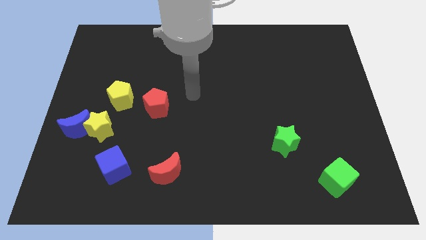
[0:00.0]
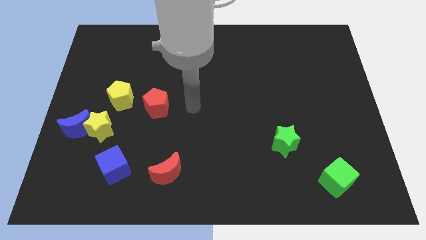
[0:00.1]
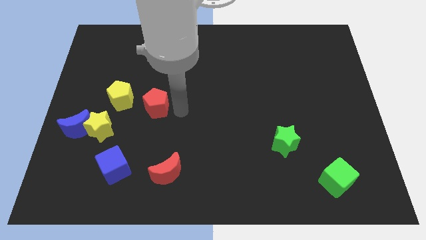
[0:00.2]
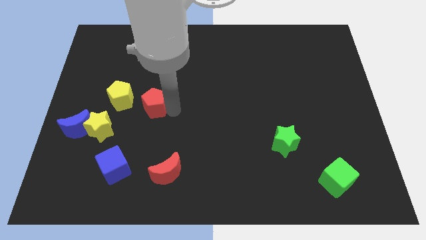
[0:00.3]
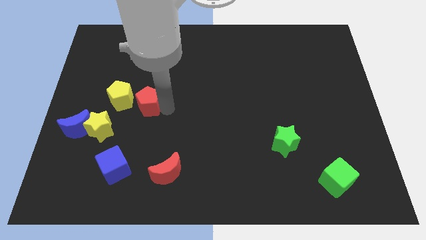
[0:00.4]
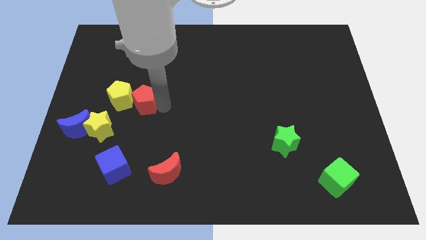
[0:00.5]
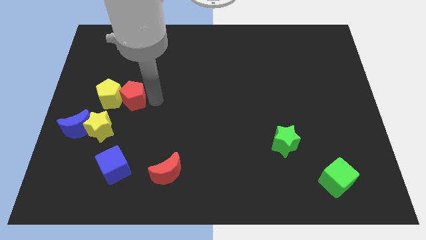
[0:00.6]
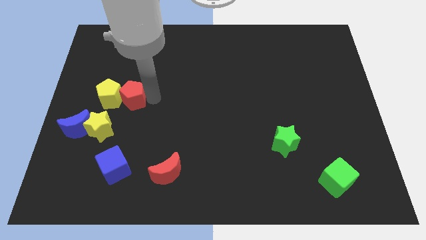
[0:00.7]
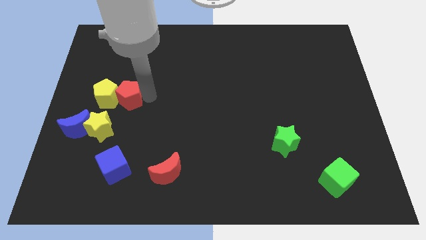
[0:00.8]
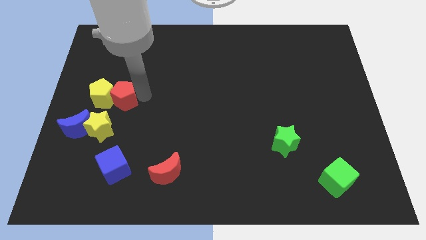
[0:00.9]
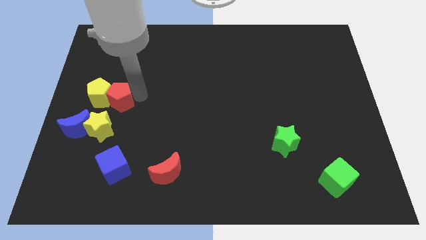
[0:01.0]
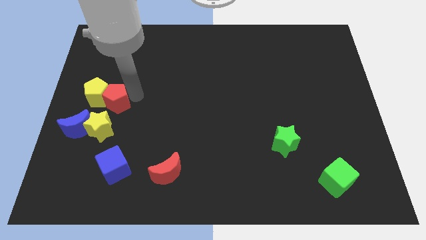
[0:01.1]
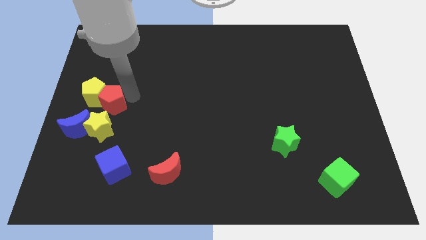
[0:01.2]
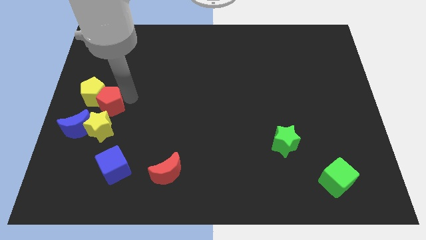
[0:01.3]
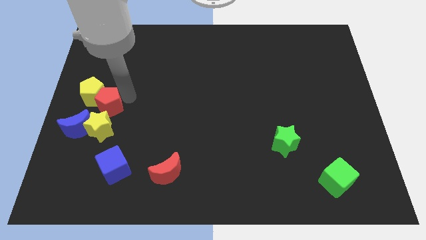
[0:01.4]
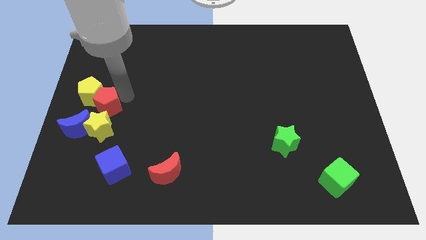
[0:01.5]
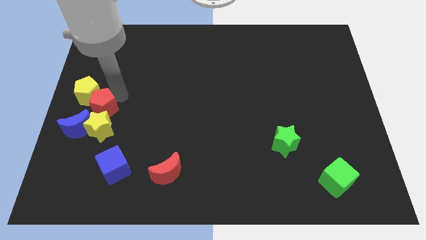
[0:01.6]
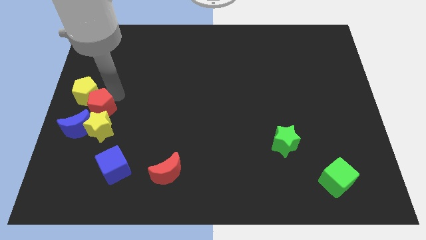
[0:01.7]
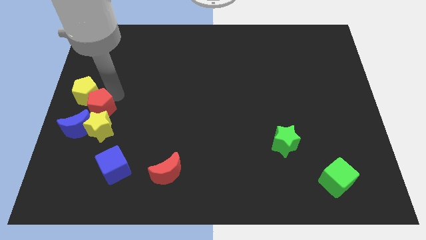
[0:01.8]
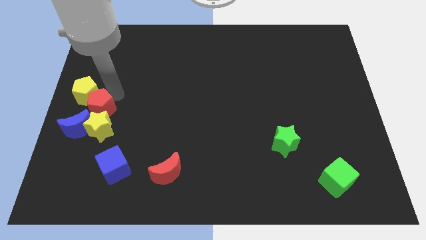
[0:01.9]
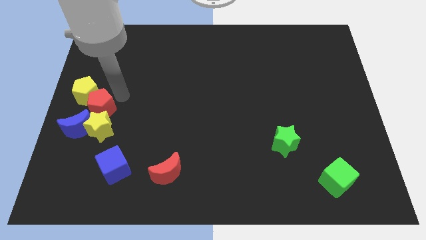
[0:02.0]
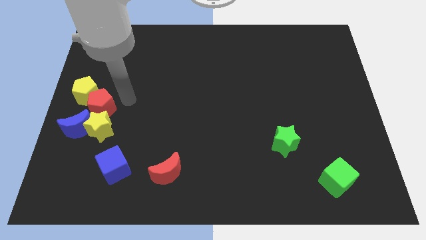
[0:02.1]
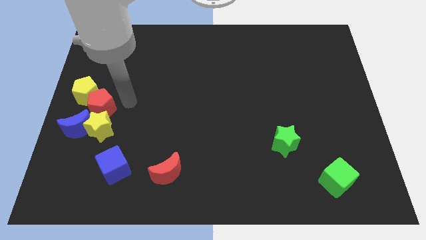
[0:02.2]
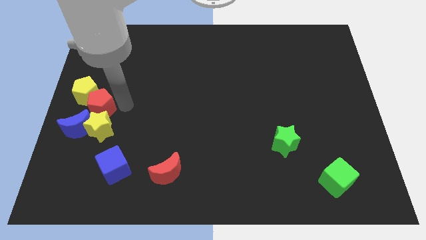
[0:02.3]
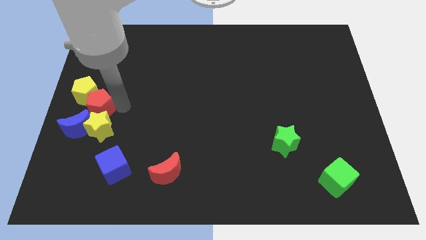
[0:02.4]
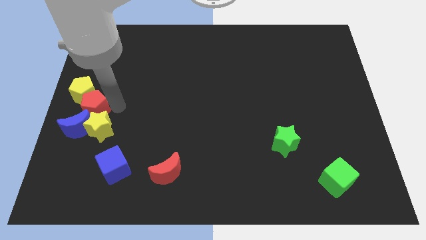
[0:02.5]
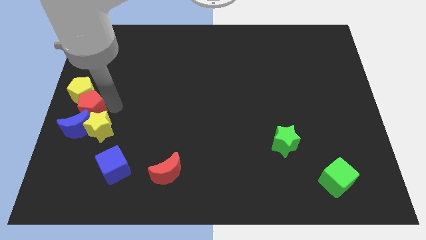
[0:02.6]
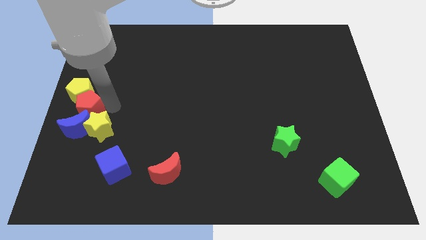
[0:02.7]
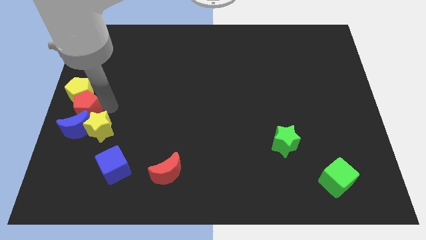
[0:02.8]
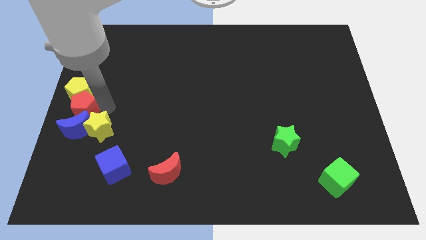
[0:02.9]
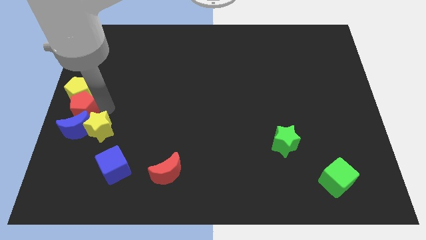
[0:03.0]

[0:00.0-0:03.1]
push the red pentagon into the yellow pentagon

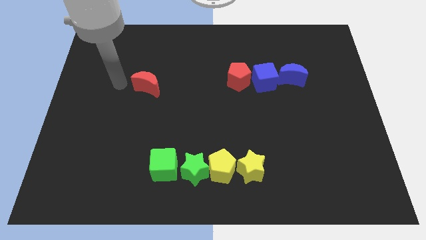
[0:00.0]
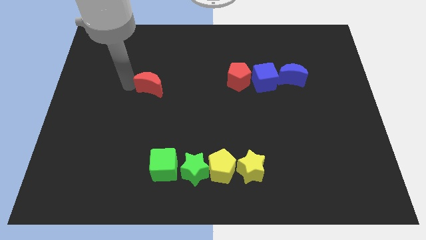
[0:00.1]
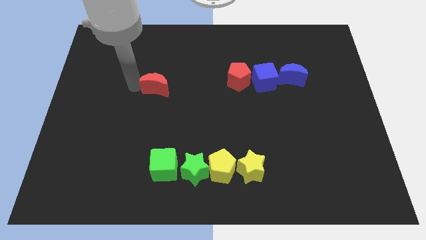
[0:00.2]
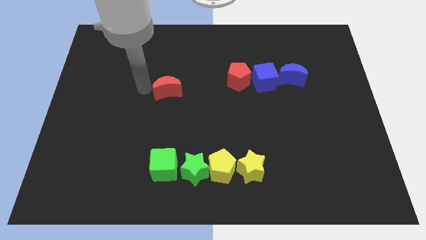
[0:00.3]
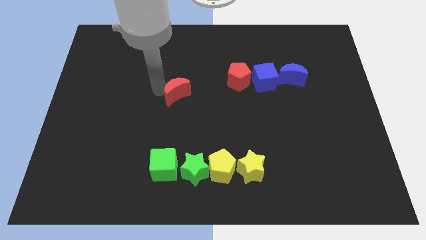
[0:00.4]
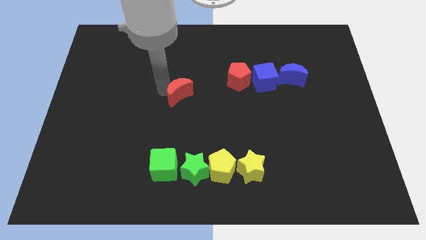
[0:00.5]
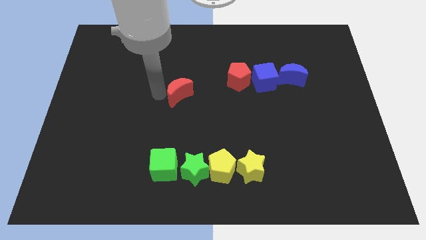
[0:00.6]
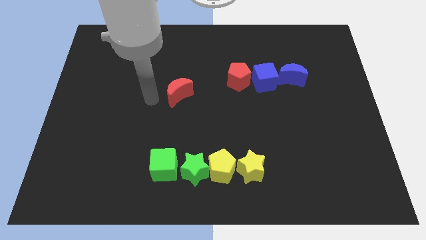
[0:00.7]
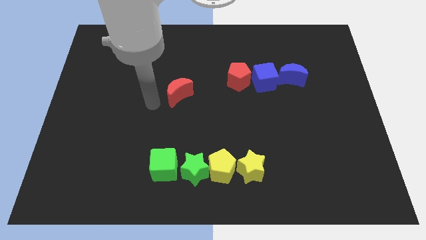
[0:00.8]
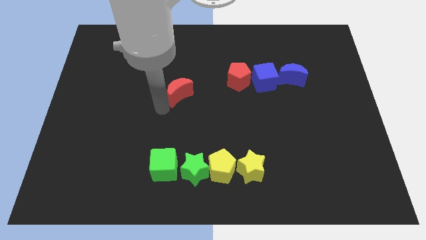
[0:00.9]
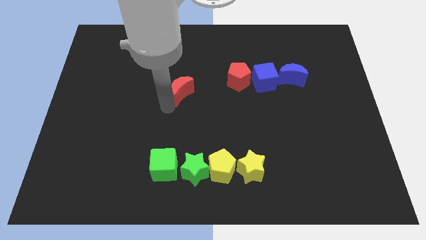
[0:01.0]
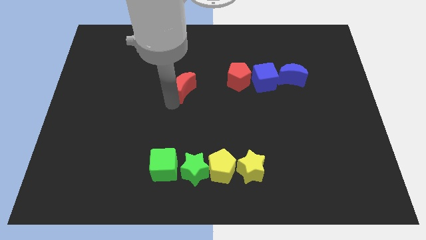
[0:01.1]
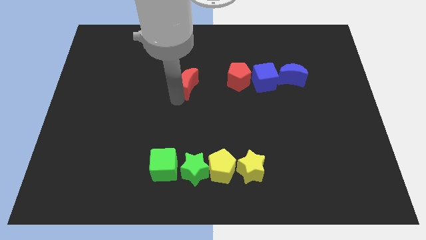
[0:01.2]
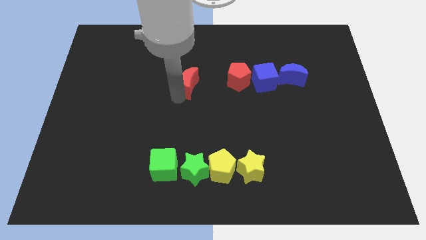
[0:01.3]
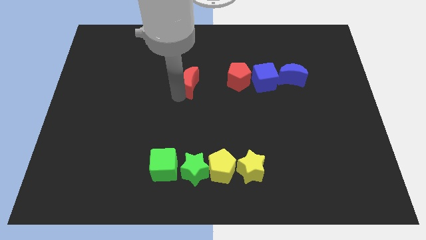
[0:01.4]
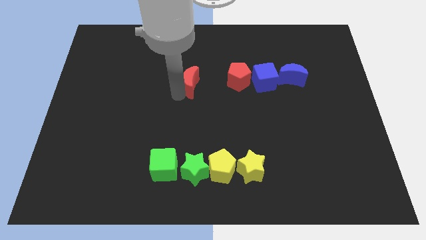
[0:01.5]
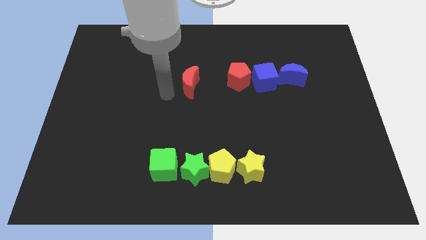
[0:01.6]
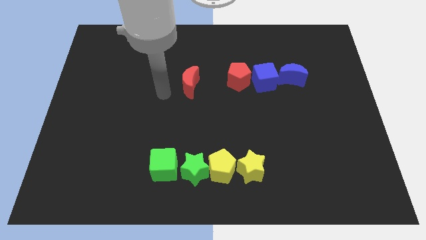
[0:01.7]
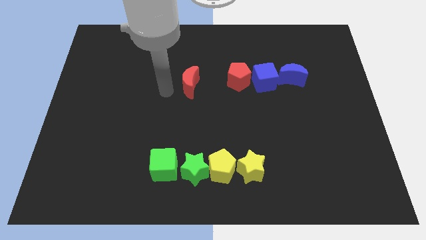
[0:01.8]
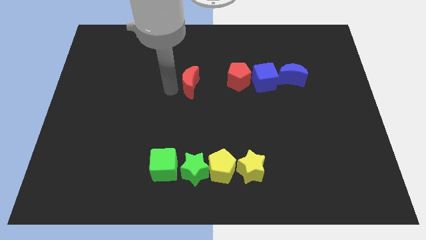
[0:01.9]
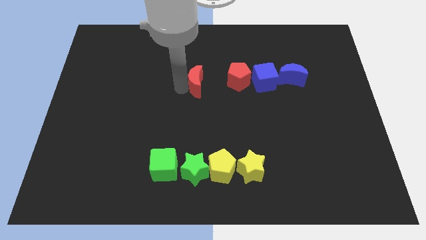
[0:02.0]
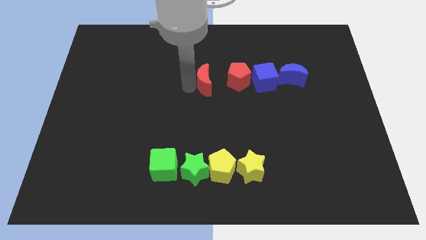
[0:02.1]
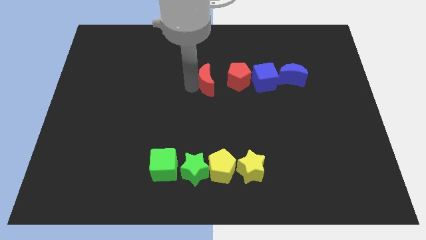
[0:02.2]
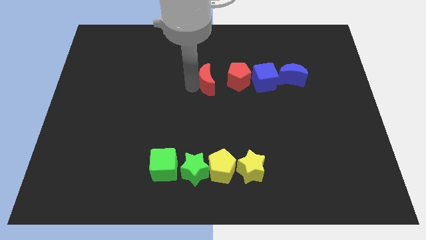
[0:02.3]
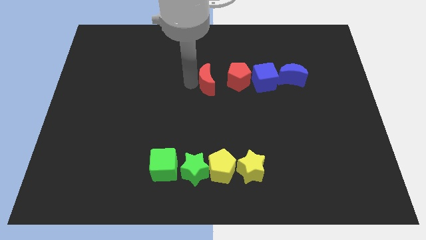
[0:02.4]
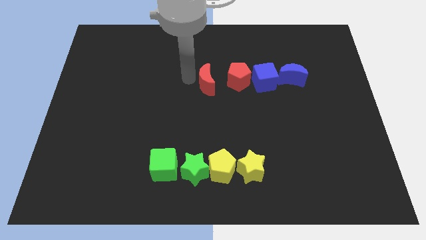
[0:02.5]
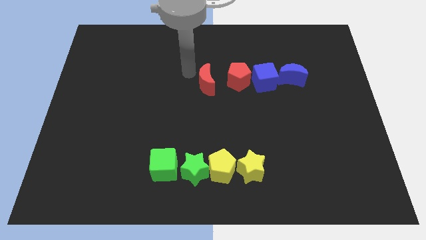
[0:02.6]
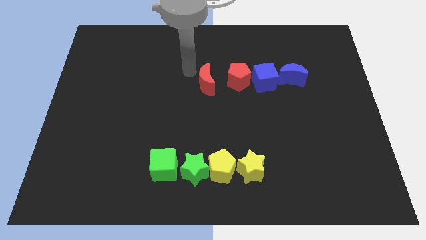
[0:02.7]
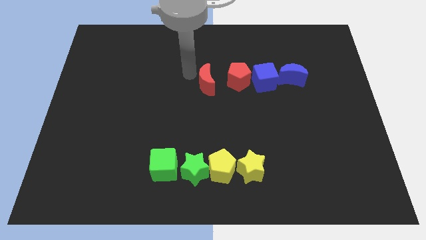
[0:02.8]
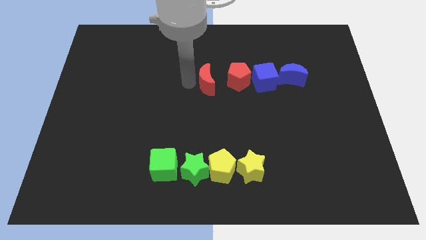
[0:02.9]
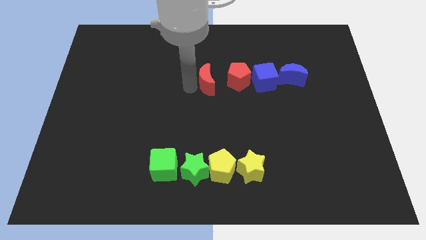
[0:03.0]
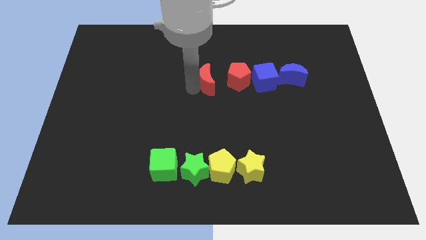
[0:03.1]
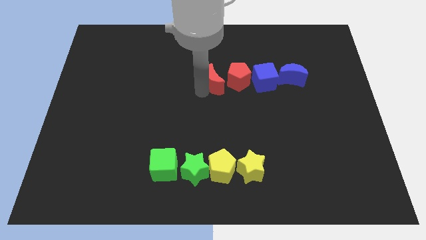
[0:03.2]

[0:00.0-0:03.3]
place the red moon parallel left to the red pentagon

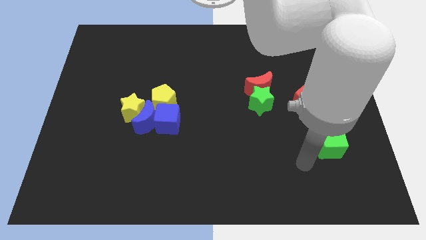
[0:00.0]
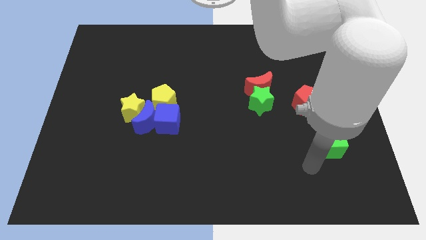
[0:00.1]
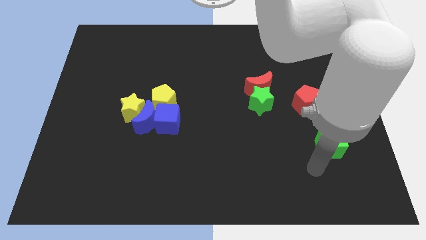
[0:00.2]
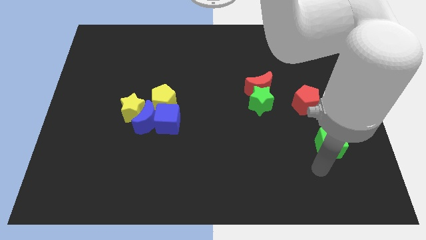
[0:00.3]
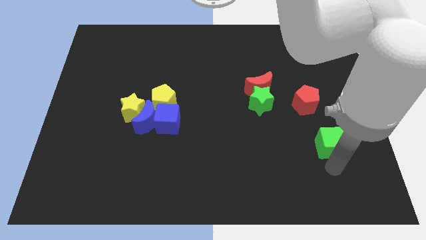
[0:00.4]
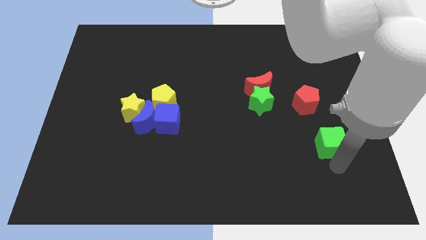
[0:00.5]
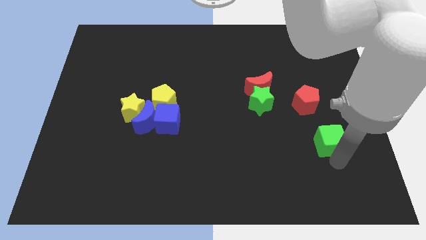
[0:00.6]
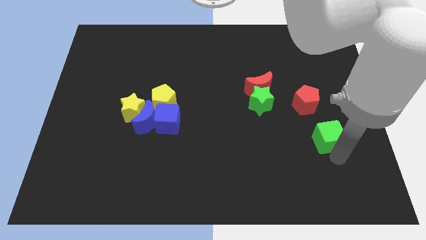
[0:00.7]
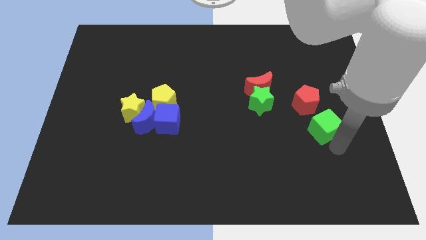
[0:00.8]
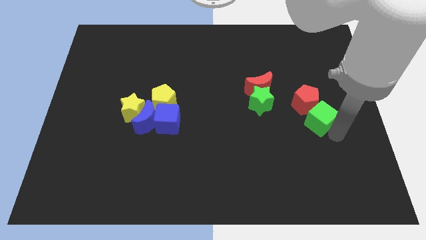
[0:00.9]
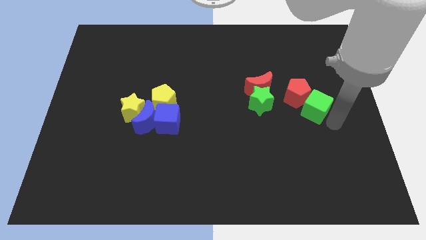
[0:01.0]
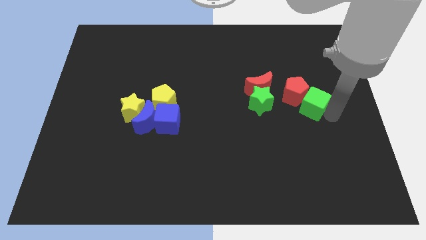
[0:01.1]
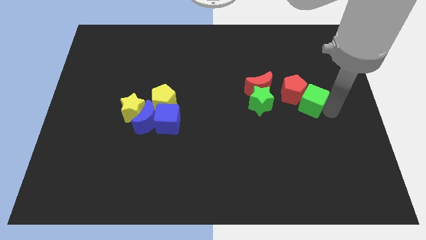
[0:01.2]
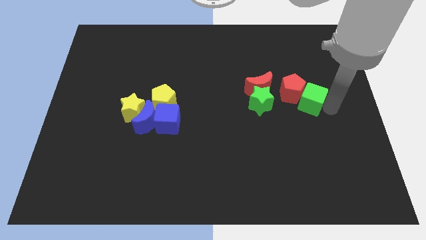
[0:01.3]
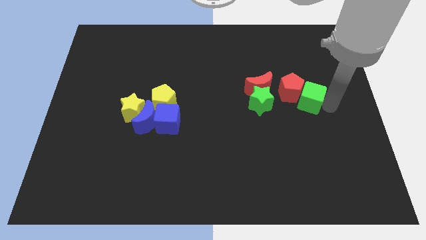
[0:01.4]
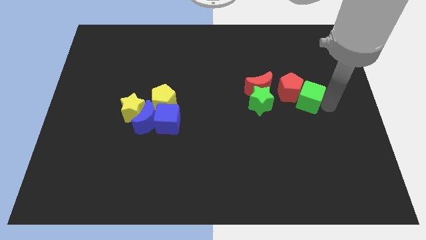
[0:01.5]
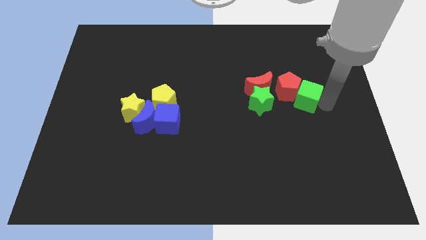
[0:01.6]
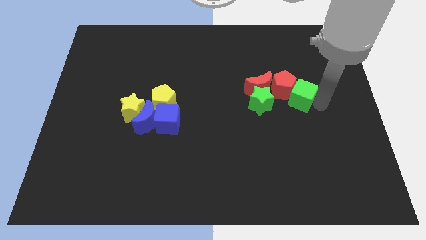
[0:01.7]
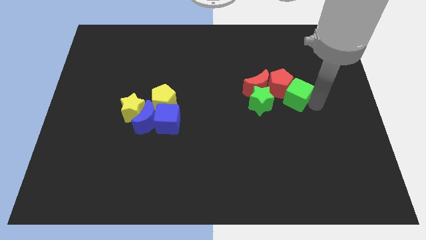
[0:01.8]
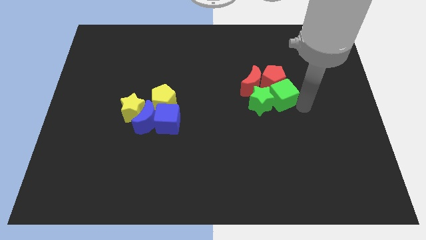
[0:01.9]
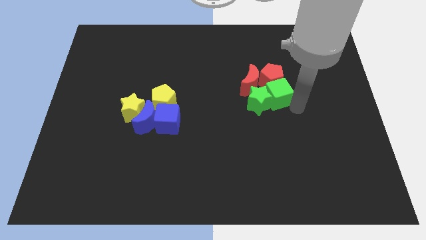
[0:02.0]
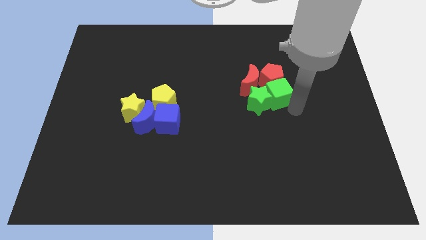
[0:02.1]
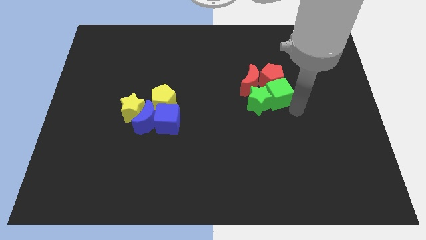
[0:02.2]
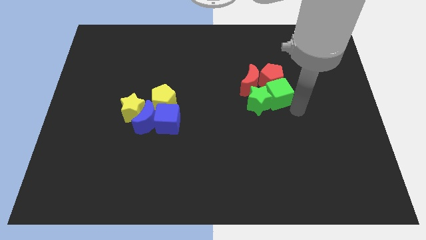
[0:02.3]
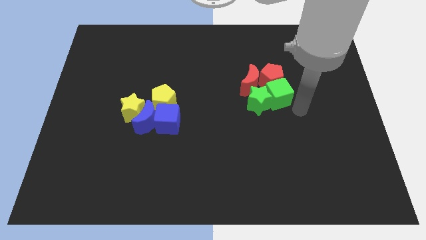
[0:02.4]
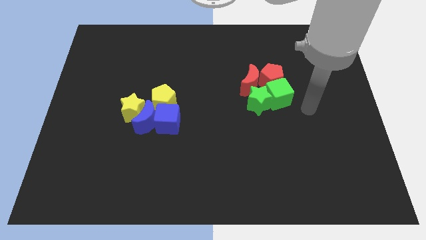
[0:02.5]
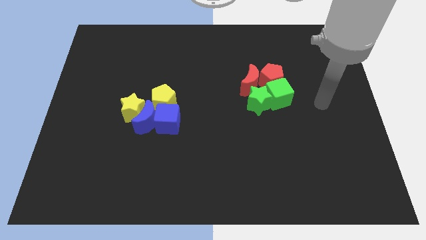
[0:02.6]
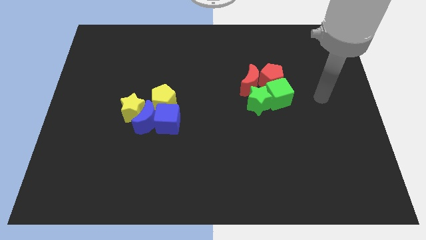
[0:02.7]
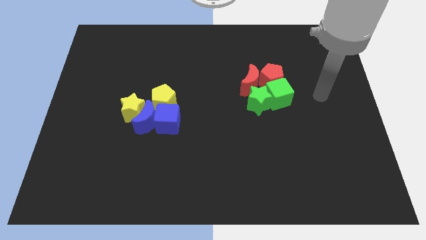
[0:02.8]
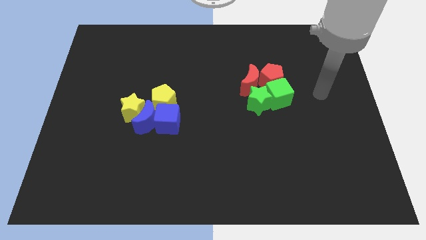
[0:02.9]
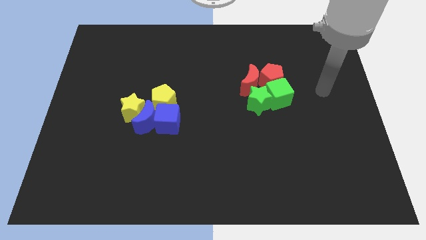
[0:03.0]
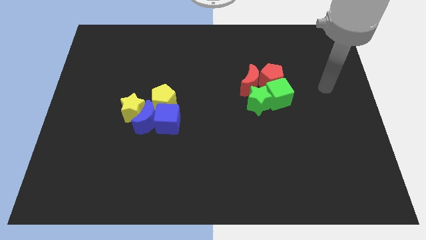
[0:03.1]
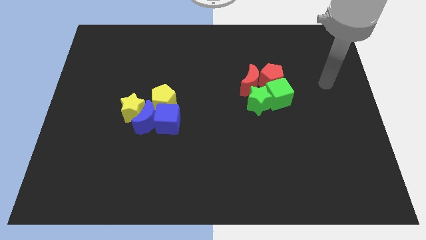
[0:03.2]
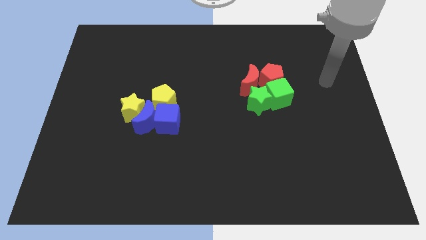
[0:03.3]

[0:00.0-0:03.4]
push the green cube into the red pentagon
